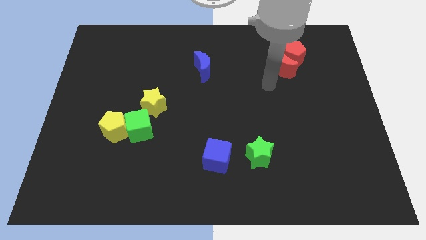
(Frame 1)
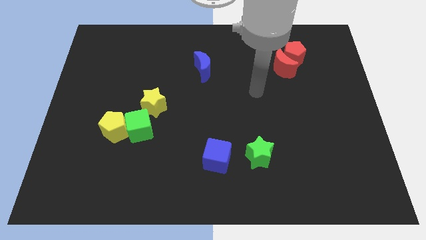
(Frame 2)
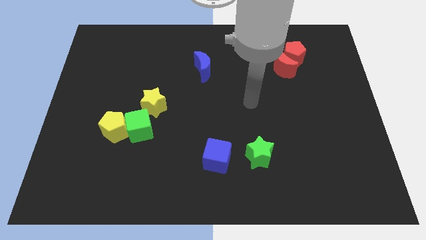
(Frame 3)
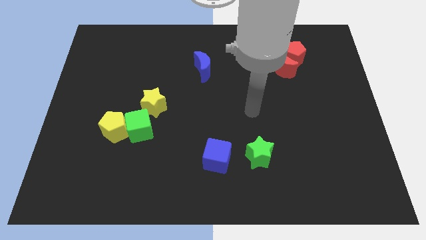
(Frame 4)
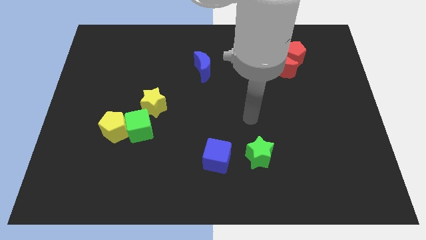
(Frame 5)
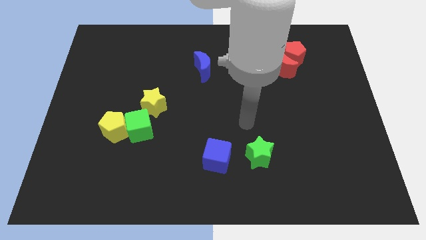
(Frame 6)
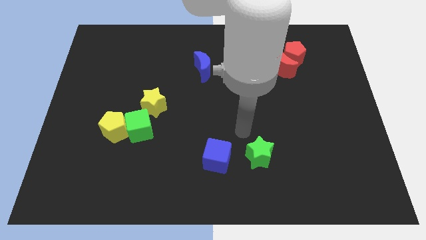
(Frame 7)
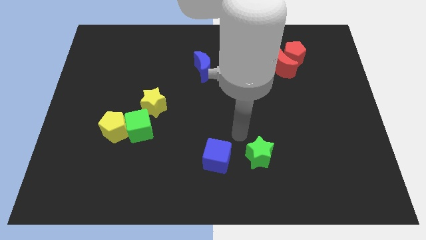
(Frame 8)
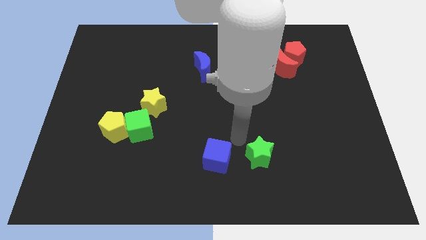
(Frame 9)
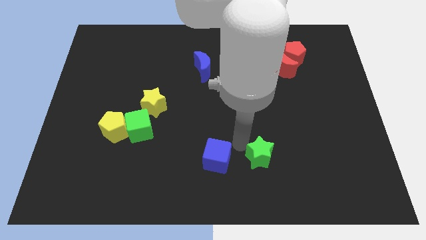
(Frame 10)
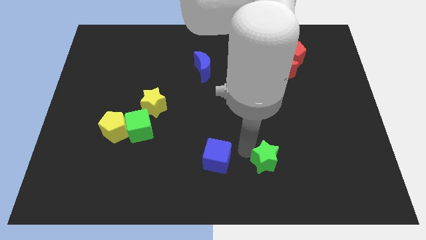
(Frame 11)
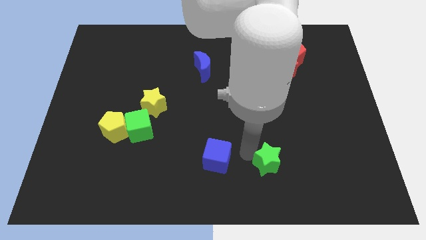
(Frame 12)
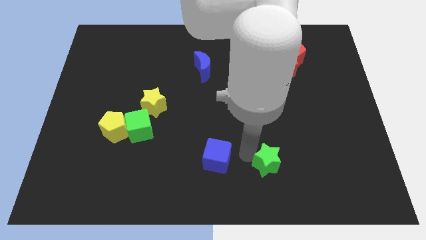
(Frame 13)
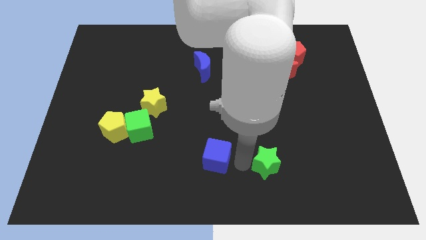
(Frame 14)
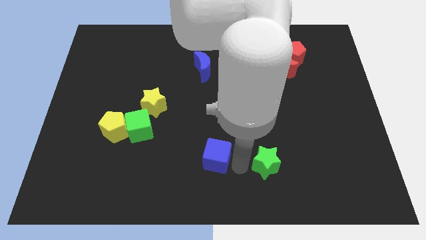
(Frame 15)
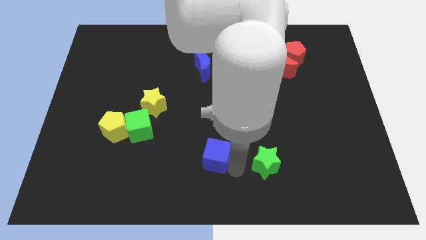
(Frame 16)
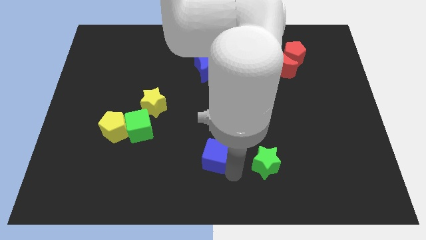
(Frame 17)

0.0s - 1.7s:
move green star slightly to the right

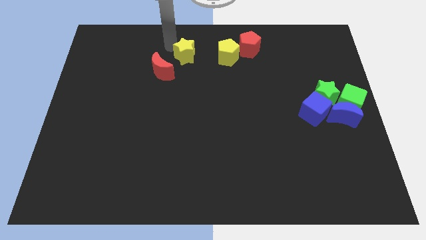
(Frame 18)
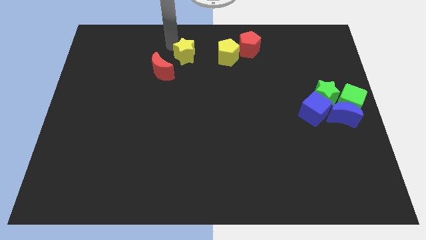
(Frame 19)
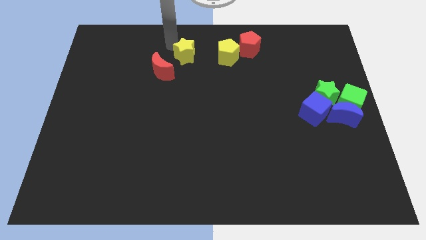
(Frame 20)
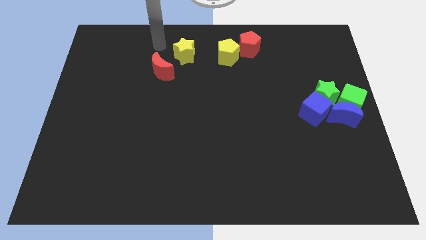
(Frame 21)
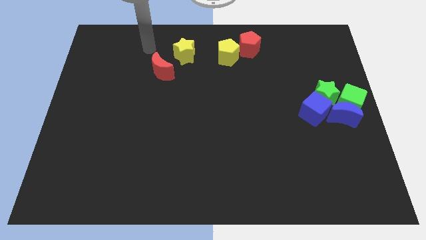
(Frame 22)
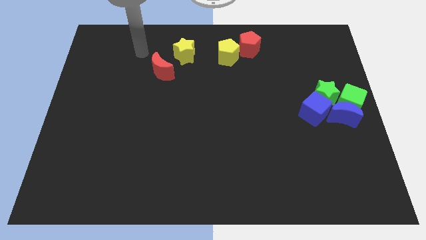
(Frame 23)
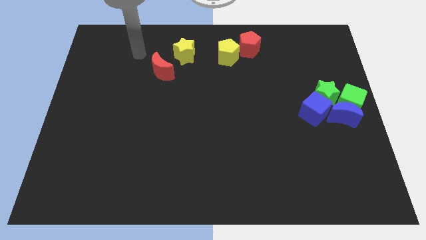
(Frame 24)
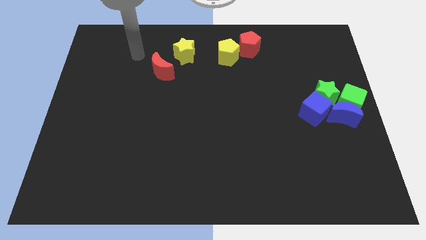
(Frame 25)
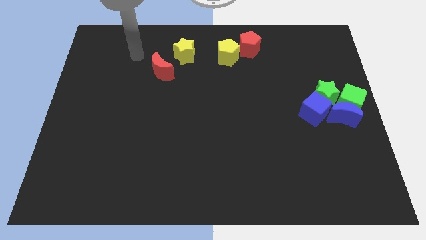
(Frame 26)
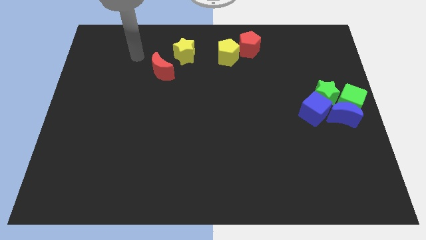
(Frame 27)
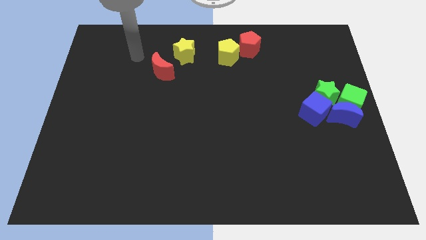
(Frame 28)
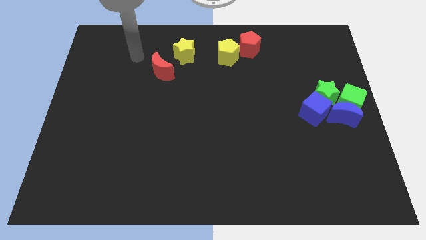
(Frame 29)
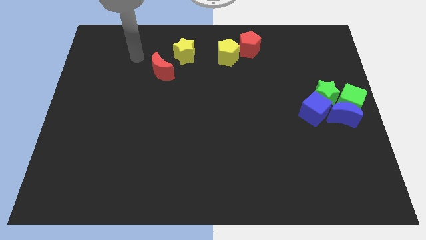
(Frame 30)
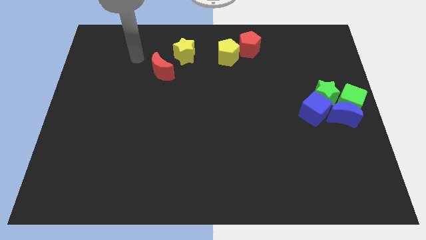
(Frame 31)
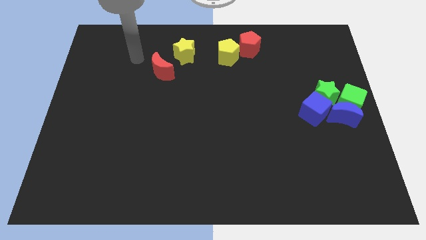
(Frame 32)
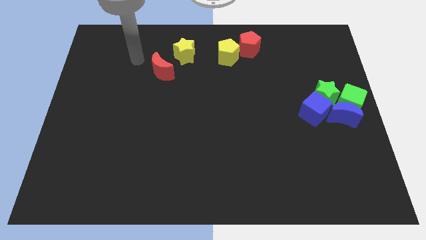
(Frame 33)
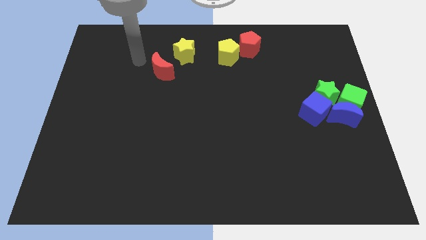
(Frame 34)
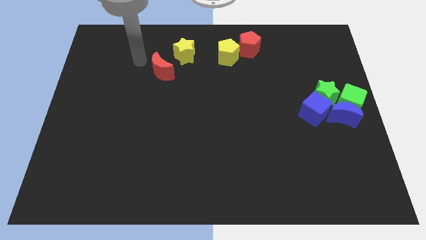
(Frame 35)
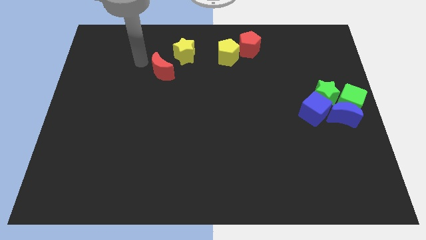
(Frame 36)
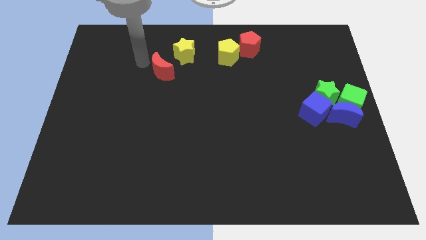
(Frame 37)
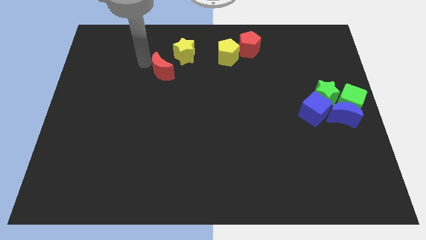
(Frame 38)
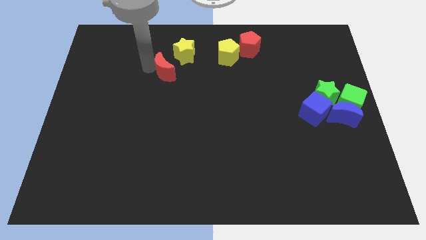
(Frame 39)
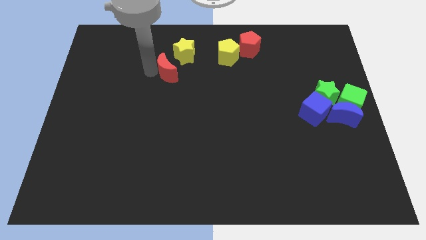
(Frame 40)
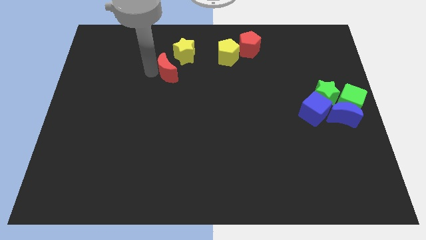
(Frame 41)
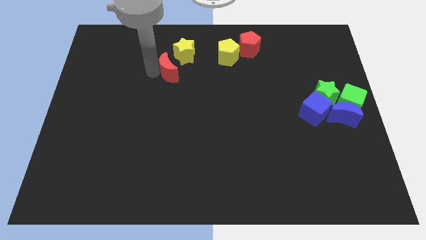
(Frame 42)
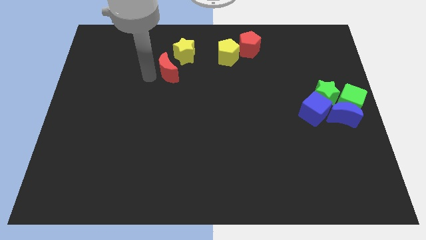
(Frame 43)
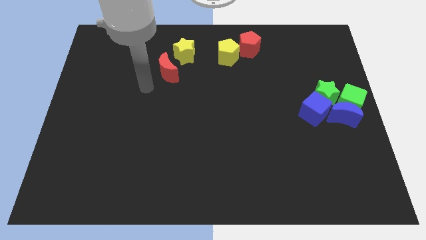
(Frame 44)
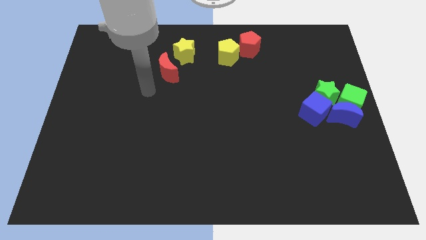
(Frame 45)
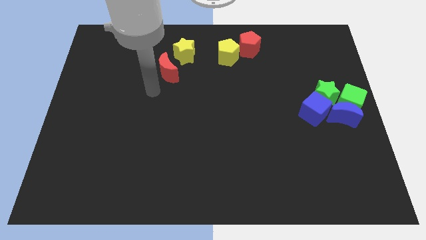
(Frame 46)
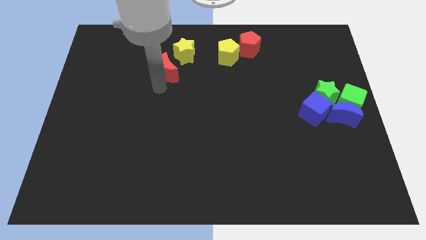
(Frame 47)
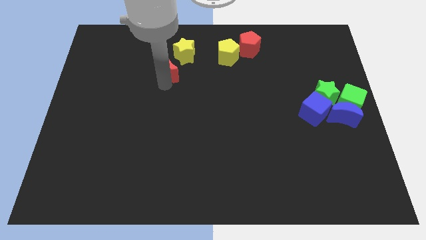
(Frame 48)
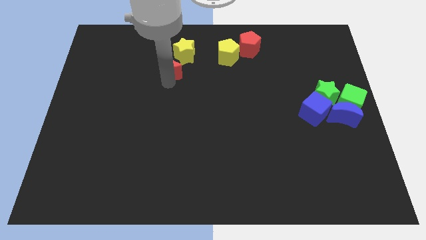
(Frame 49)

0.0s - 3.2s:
move the red crescent slightly towards right

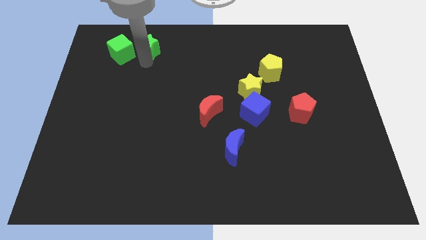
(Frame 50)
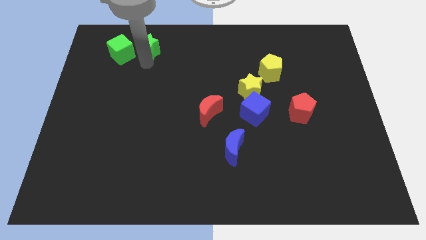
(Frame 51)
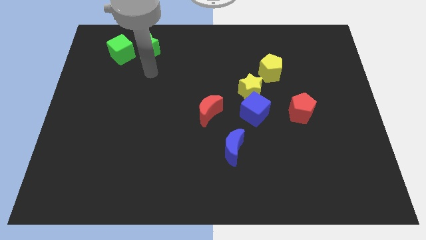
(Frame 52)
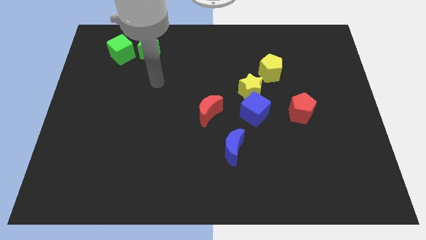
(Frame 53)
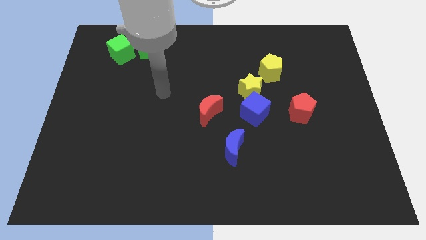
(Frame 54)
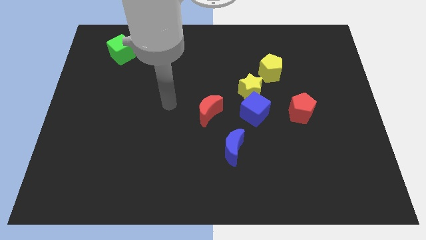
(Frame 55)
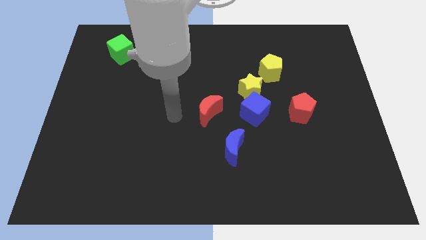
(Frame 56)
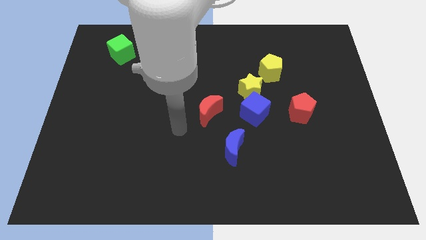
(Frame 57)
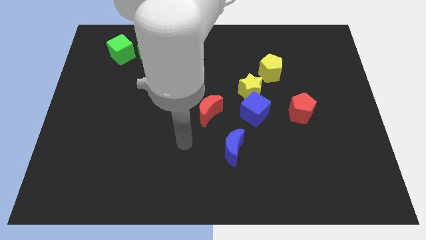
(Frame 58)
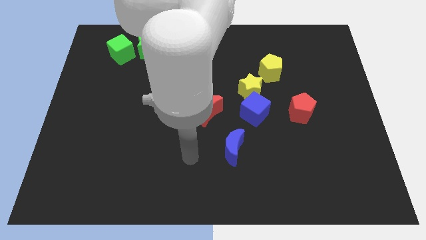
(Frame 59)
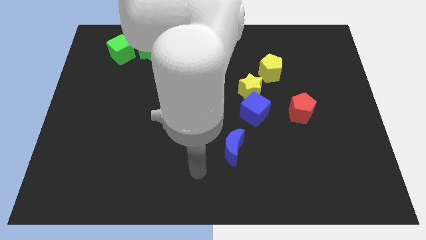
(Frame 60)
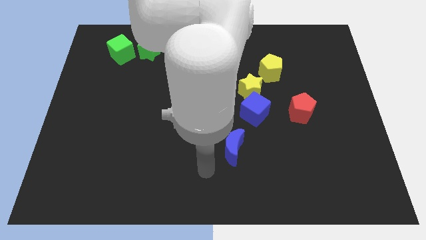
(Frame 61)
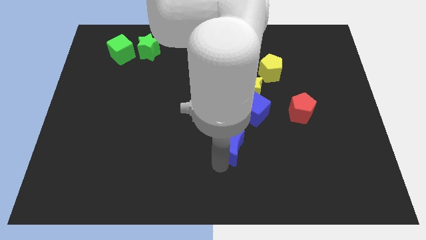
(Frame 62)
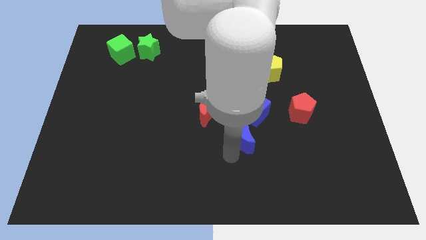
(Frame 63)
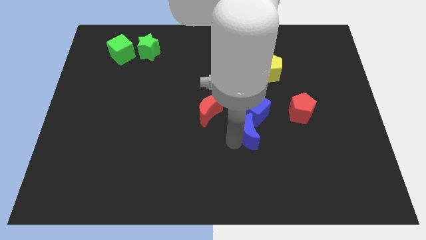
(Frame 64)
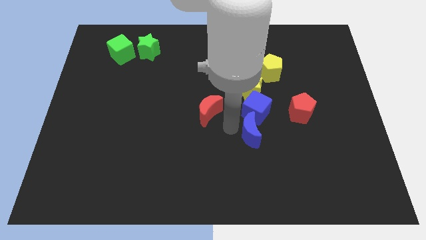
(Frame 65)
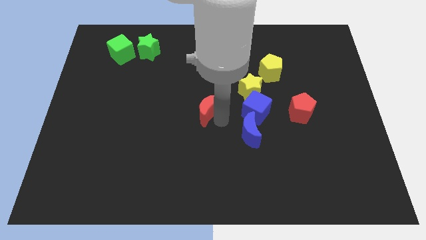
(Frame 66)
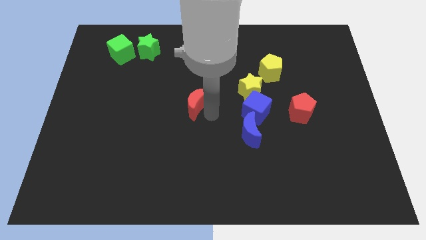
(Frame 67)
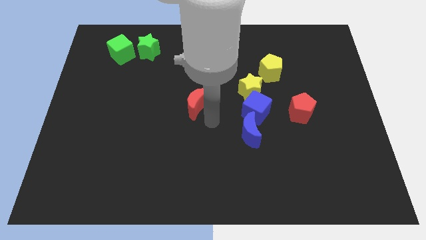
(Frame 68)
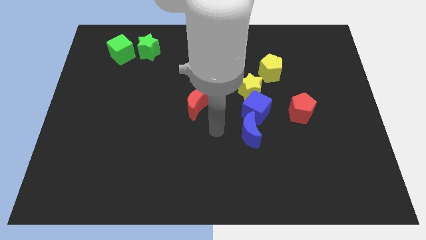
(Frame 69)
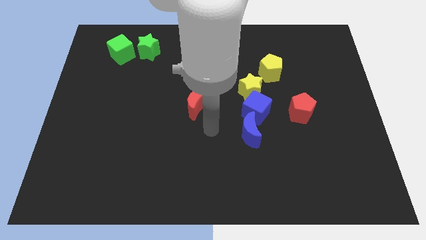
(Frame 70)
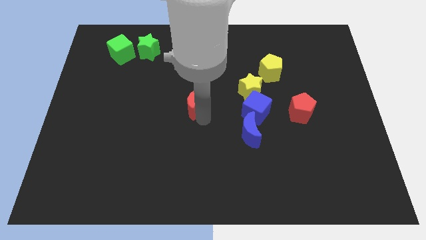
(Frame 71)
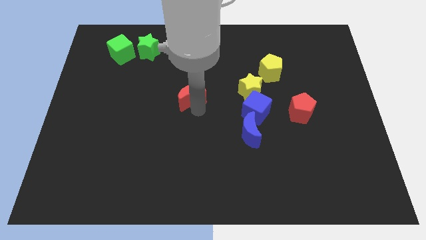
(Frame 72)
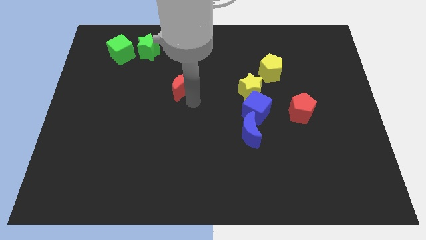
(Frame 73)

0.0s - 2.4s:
push the blue moon into the blue cube

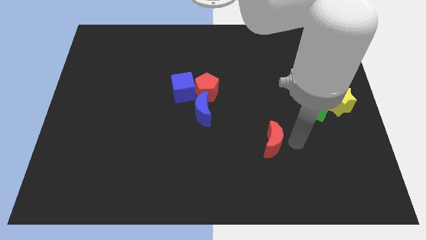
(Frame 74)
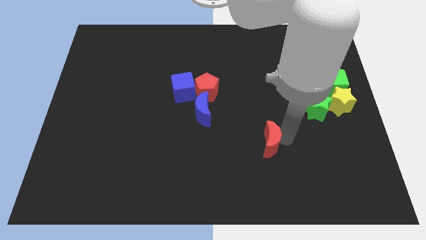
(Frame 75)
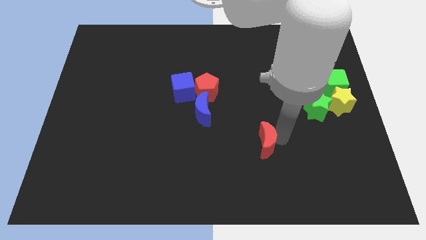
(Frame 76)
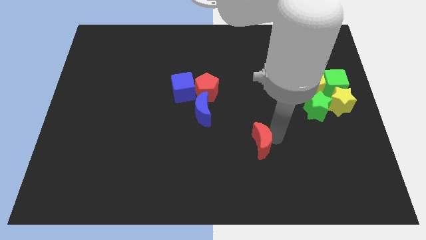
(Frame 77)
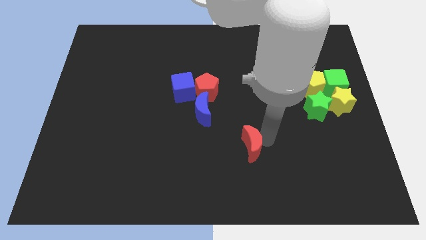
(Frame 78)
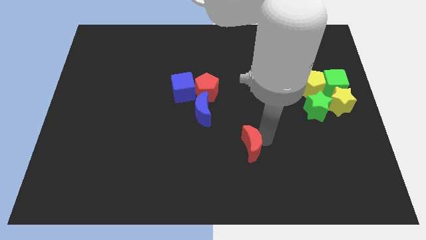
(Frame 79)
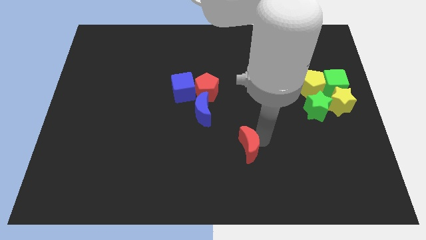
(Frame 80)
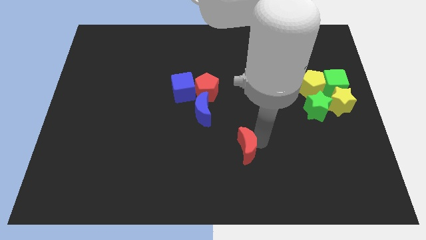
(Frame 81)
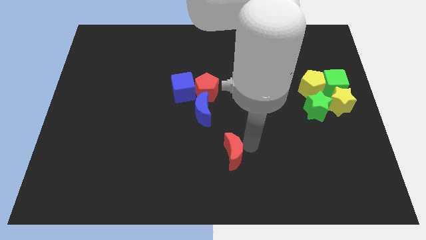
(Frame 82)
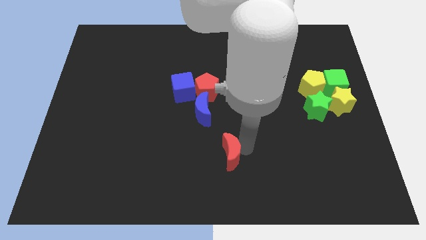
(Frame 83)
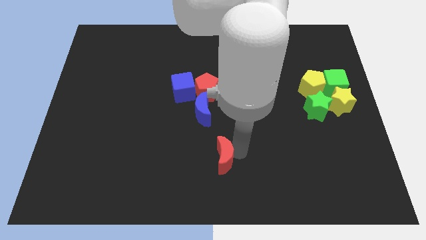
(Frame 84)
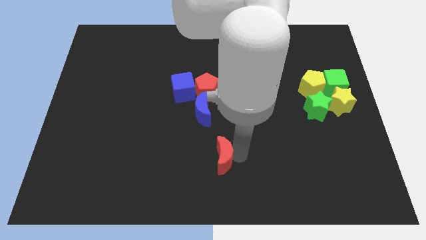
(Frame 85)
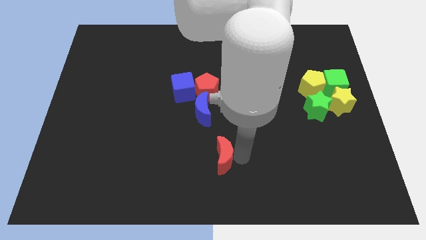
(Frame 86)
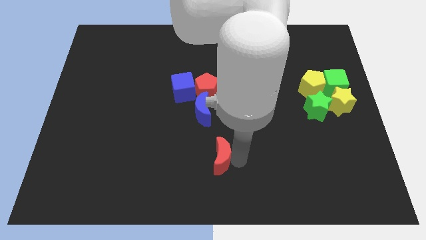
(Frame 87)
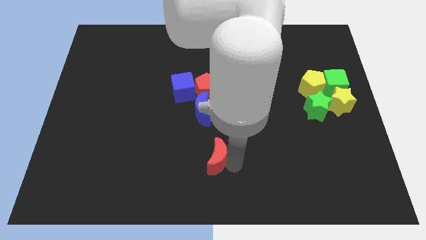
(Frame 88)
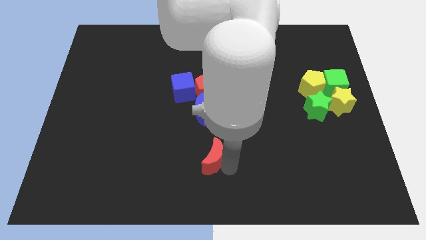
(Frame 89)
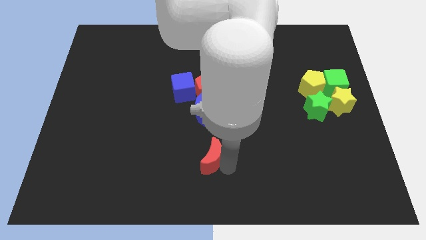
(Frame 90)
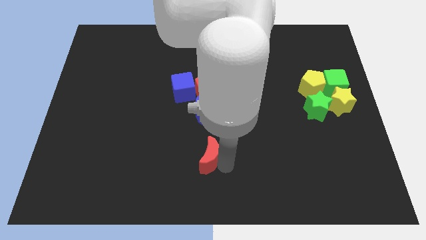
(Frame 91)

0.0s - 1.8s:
push the red crescent to the bottom of the blue crescent
